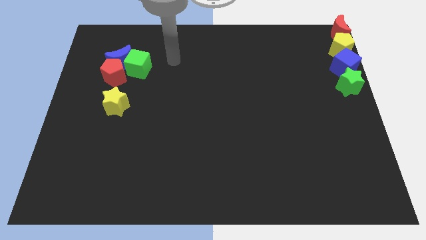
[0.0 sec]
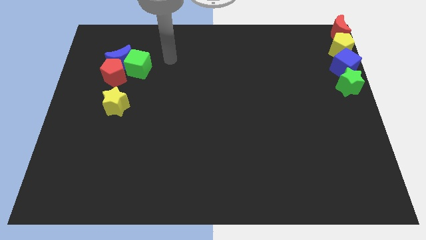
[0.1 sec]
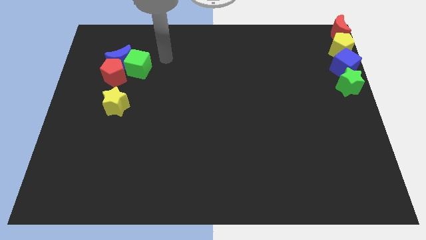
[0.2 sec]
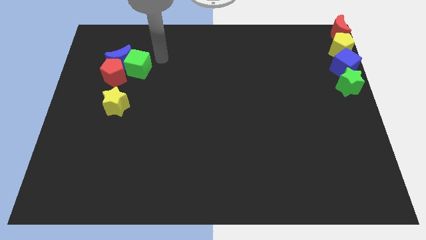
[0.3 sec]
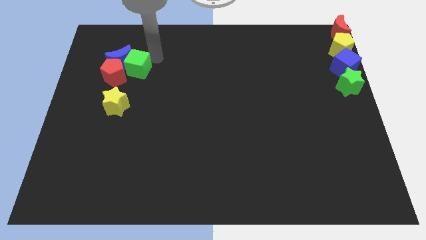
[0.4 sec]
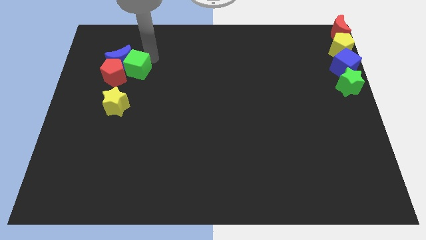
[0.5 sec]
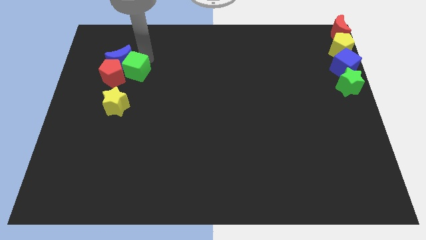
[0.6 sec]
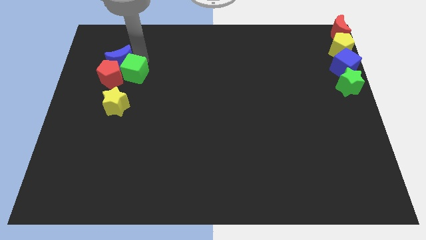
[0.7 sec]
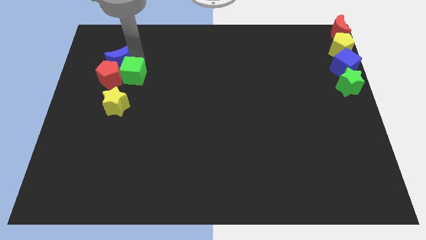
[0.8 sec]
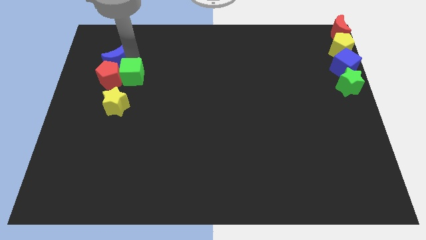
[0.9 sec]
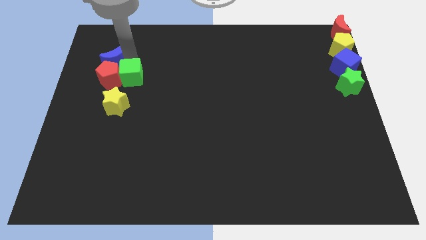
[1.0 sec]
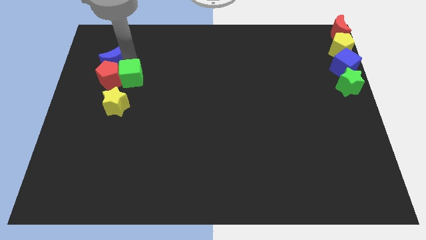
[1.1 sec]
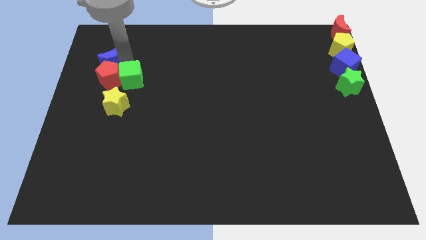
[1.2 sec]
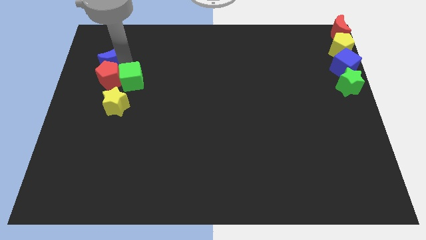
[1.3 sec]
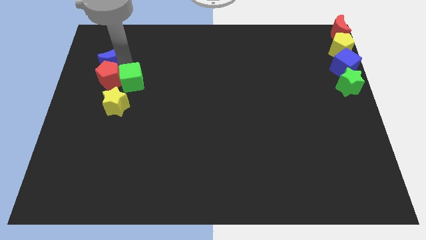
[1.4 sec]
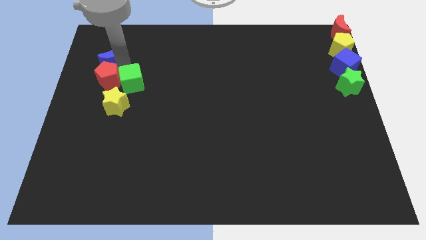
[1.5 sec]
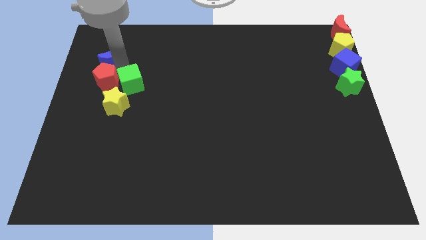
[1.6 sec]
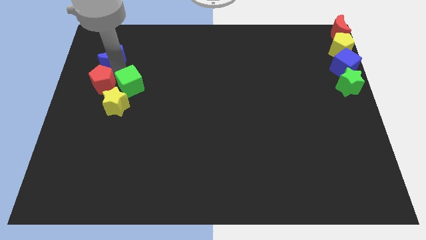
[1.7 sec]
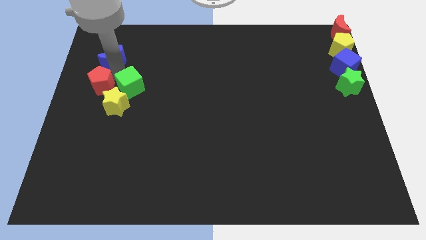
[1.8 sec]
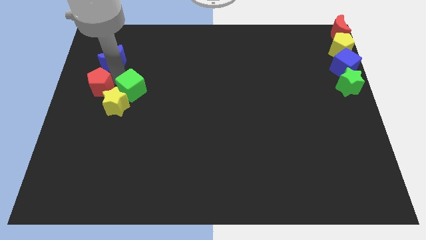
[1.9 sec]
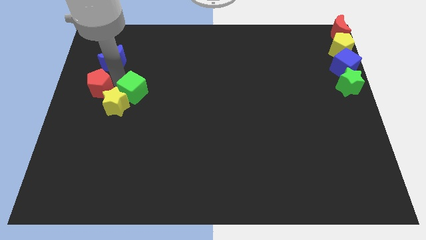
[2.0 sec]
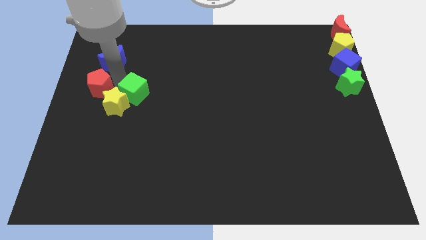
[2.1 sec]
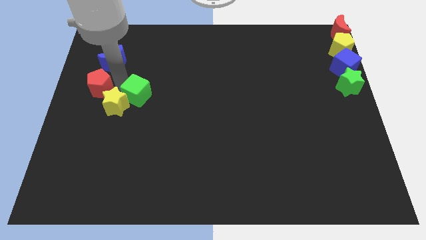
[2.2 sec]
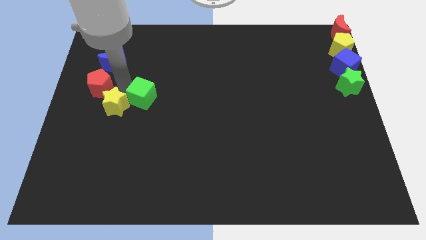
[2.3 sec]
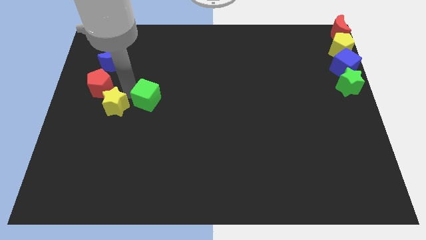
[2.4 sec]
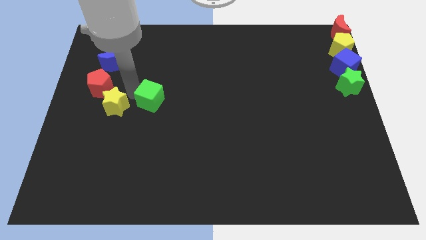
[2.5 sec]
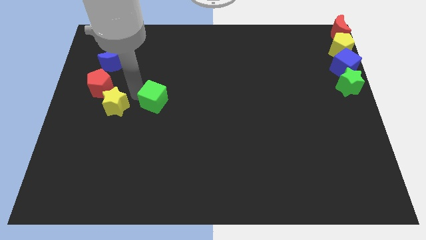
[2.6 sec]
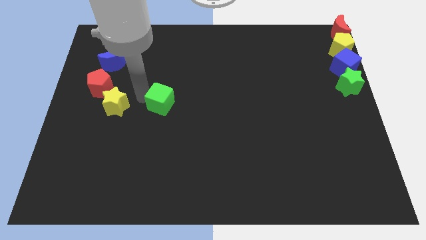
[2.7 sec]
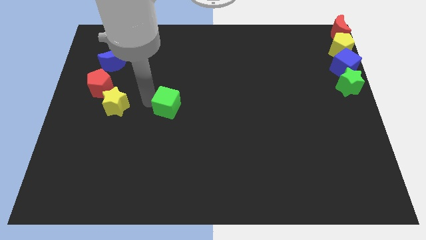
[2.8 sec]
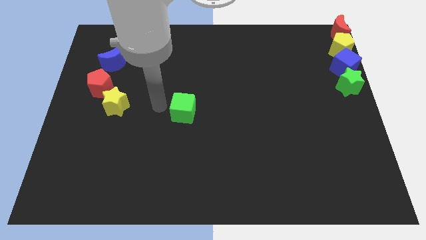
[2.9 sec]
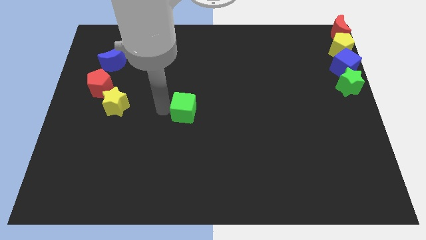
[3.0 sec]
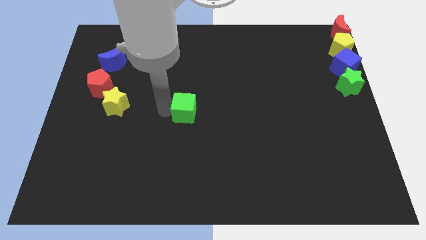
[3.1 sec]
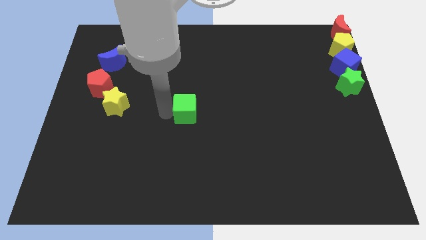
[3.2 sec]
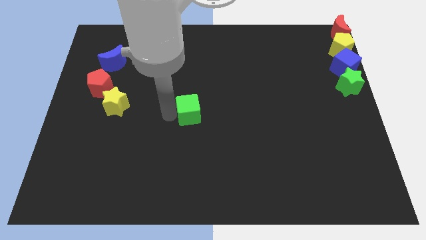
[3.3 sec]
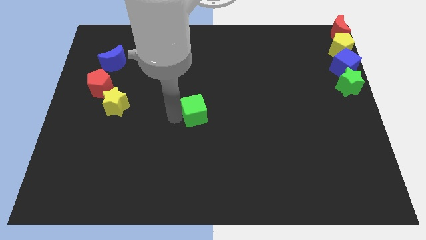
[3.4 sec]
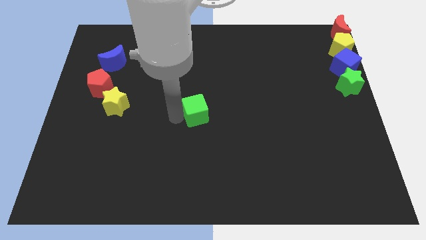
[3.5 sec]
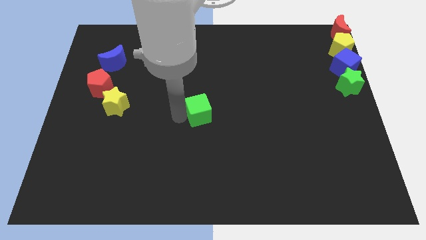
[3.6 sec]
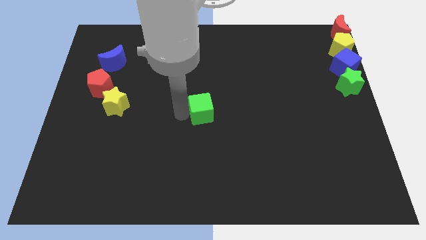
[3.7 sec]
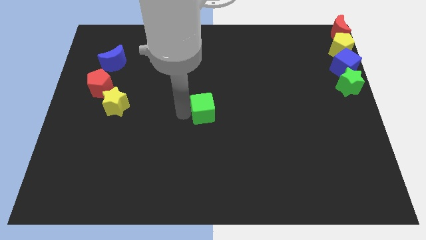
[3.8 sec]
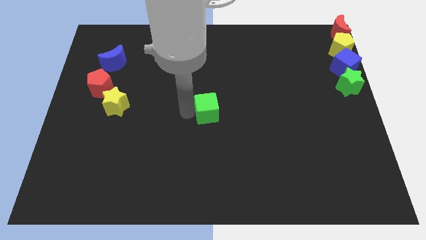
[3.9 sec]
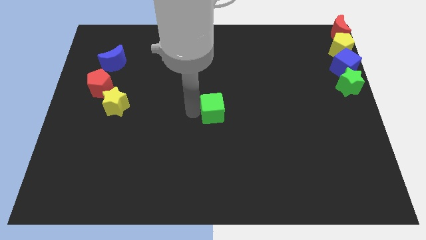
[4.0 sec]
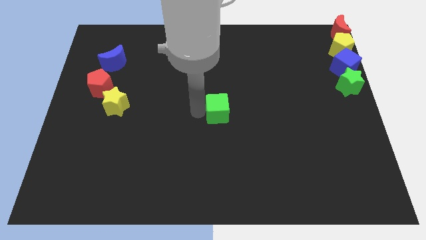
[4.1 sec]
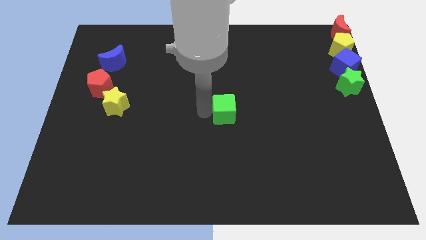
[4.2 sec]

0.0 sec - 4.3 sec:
place the green square at the center of the board

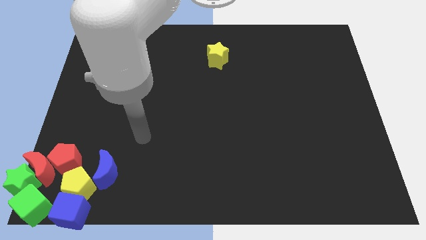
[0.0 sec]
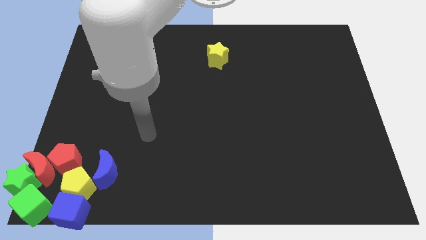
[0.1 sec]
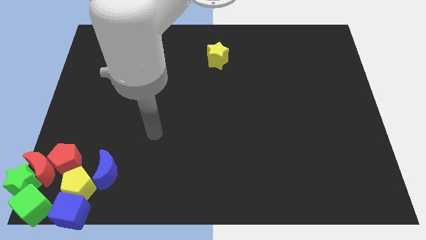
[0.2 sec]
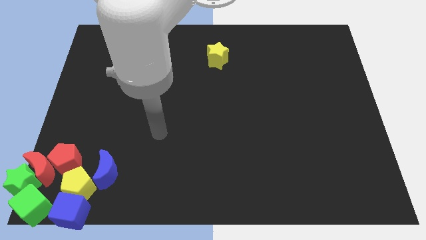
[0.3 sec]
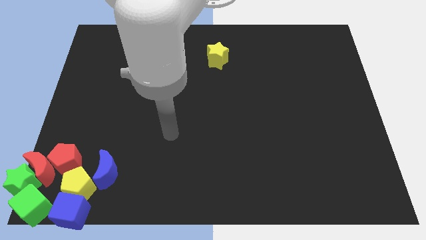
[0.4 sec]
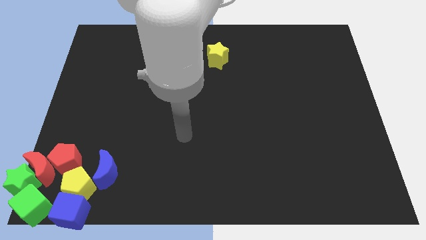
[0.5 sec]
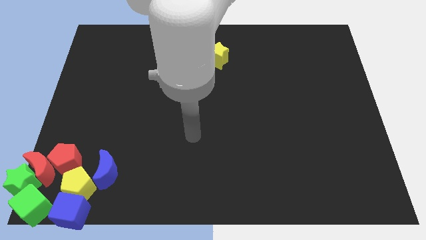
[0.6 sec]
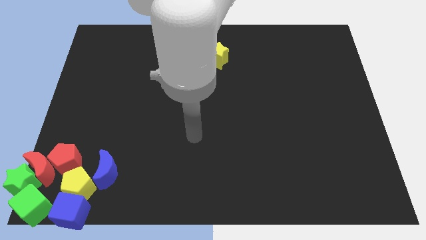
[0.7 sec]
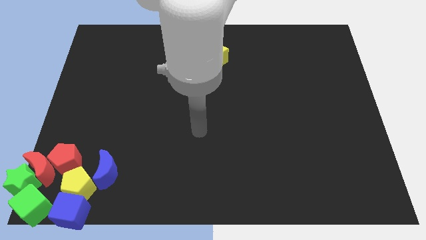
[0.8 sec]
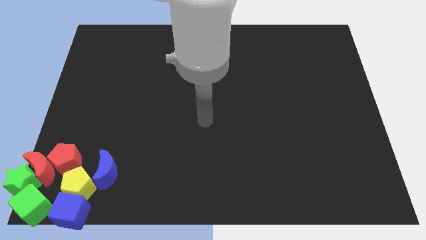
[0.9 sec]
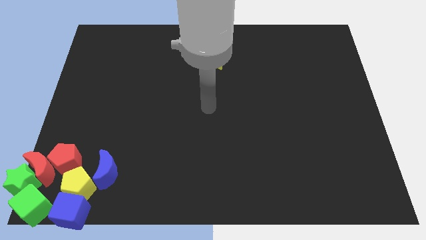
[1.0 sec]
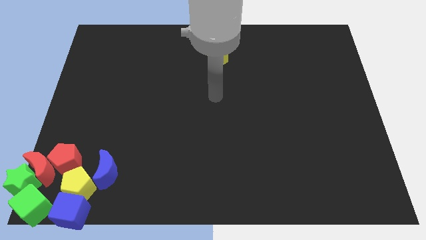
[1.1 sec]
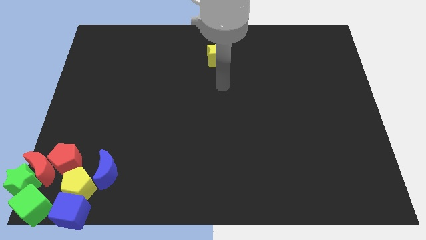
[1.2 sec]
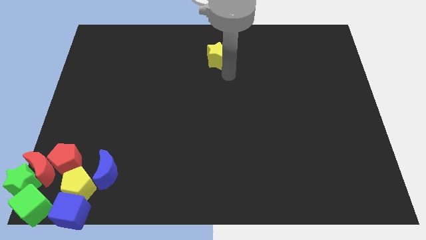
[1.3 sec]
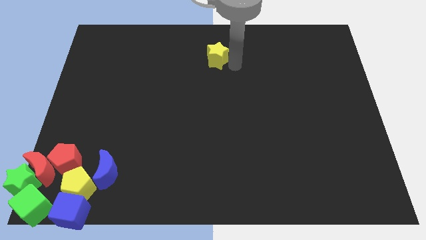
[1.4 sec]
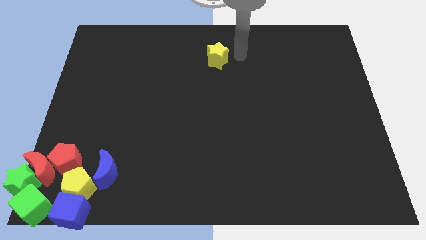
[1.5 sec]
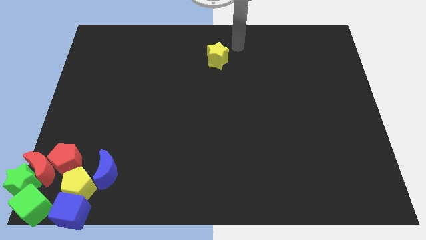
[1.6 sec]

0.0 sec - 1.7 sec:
move your arm towards the top center of the yellow star

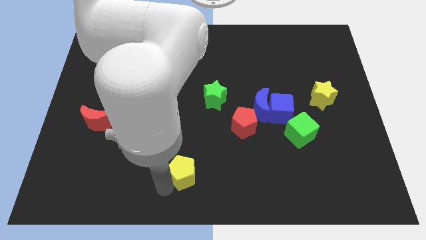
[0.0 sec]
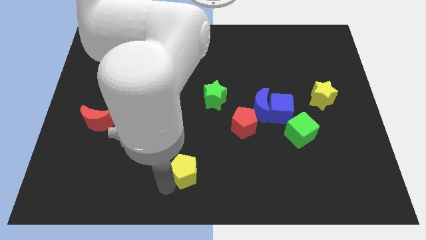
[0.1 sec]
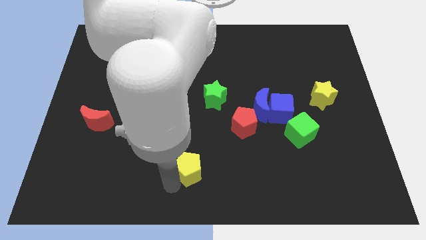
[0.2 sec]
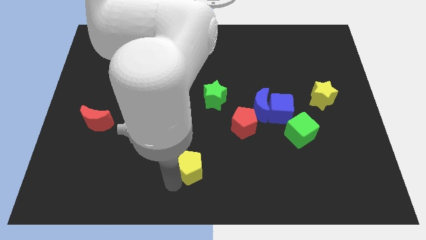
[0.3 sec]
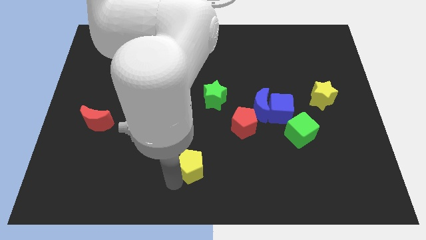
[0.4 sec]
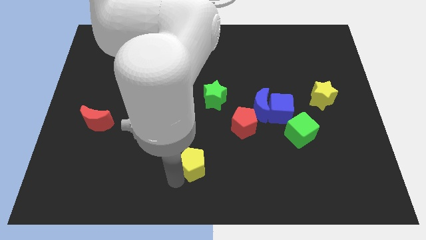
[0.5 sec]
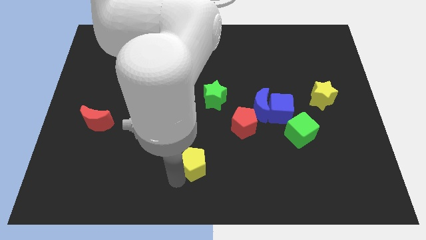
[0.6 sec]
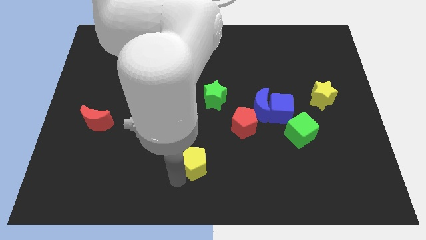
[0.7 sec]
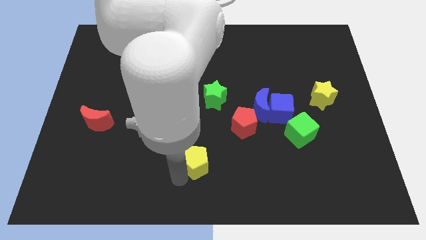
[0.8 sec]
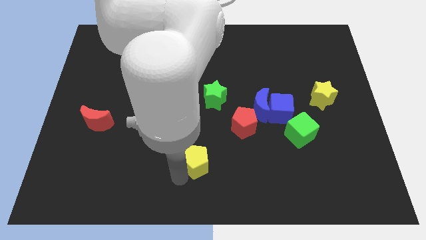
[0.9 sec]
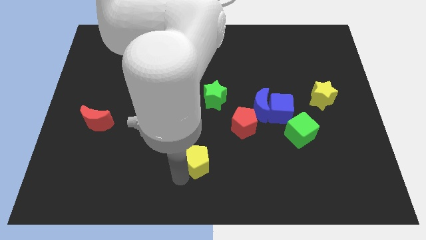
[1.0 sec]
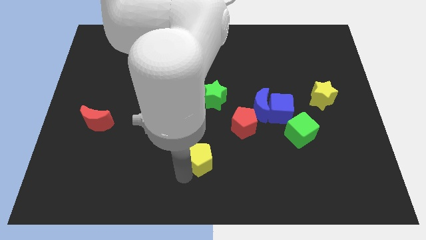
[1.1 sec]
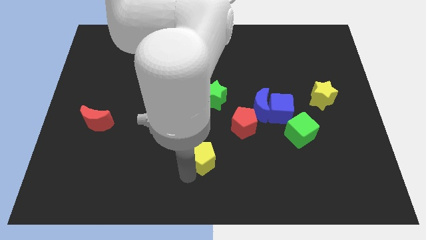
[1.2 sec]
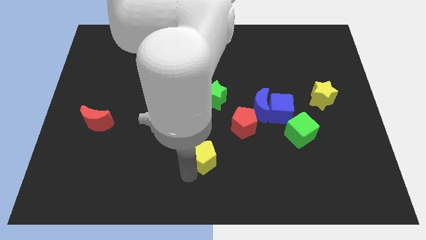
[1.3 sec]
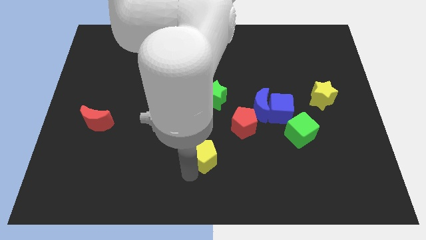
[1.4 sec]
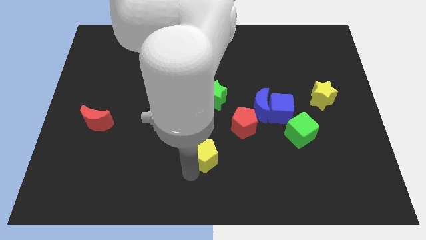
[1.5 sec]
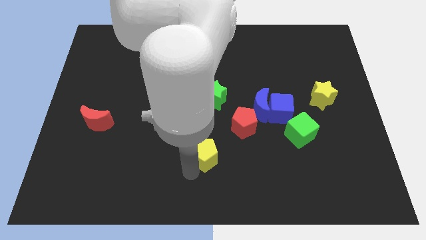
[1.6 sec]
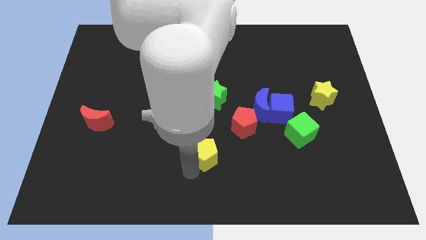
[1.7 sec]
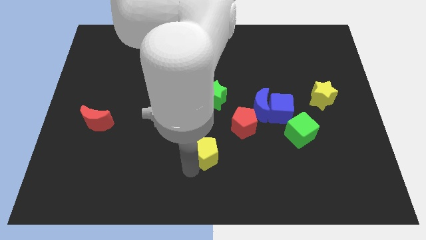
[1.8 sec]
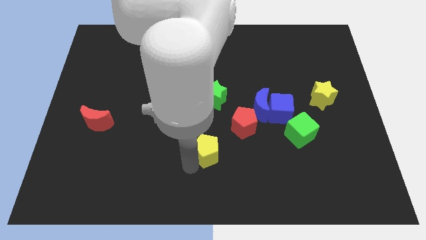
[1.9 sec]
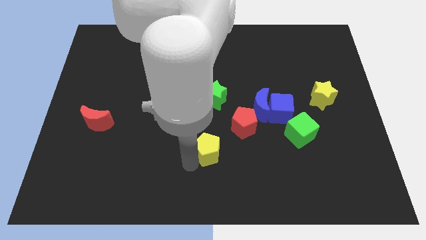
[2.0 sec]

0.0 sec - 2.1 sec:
push yellow pentagon towards center

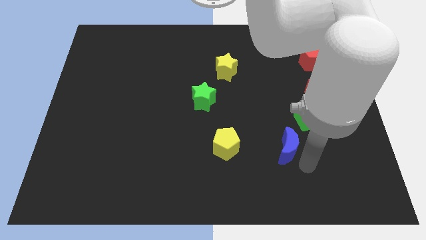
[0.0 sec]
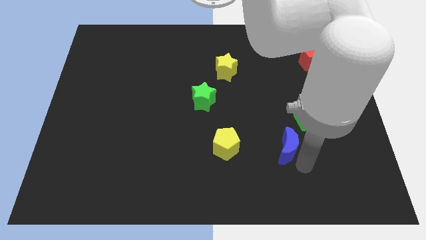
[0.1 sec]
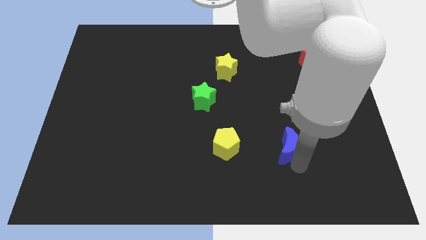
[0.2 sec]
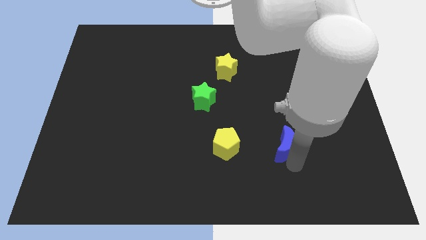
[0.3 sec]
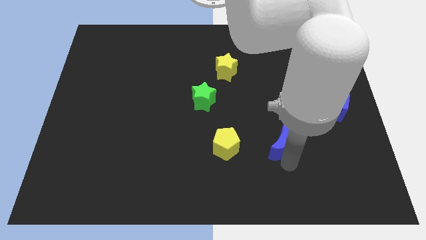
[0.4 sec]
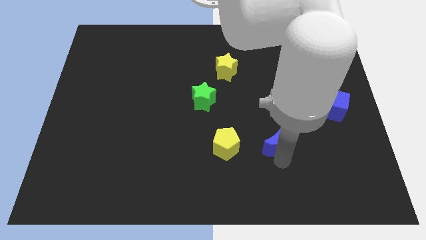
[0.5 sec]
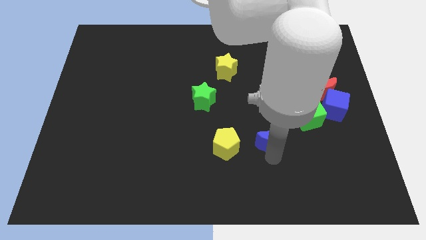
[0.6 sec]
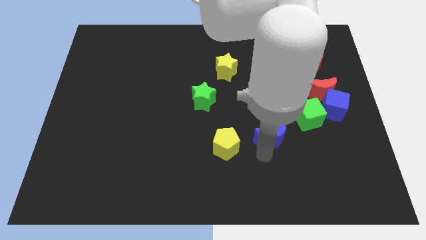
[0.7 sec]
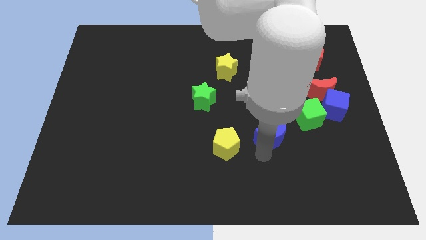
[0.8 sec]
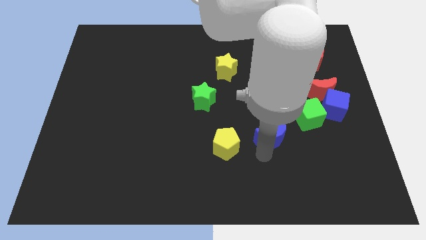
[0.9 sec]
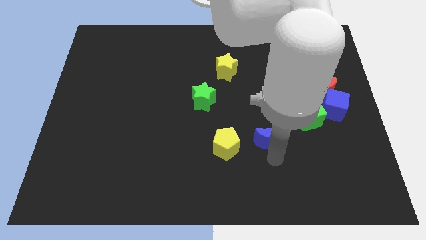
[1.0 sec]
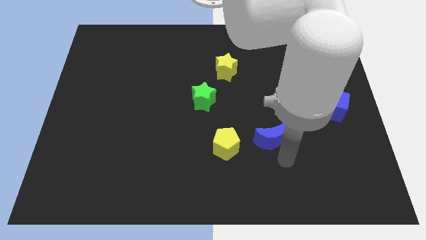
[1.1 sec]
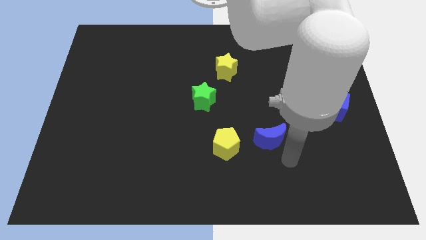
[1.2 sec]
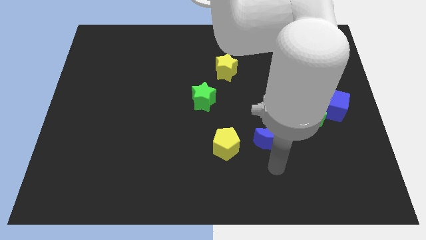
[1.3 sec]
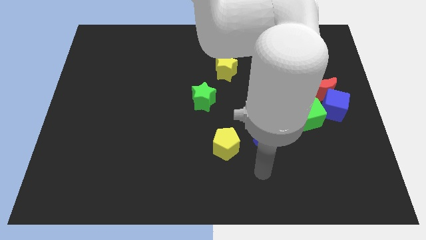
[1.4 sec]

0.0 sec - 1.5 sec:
push the blue moon to the right of the yellow pentagon
